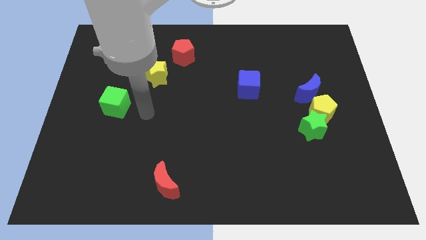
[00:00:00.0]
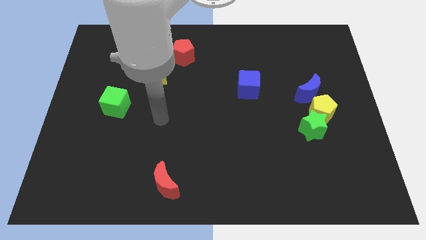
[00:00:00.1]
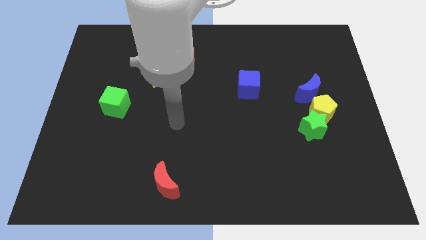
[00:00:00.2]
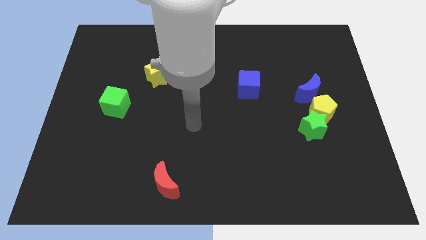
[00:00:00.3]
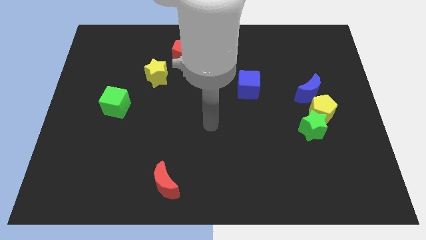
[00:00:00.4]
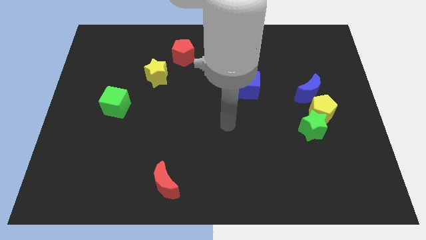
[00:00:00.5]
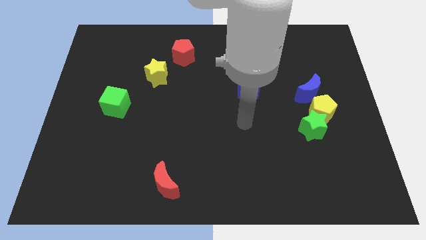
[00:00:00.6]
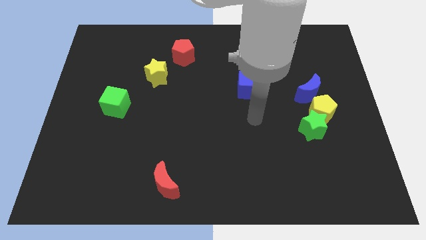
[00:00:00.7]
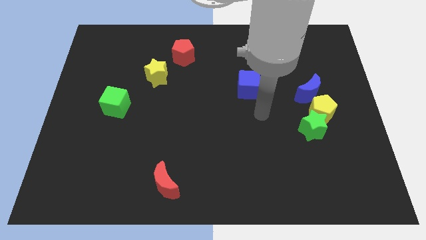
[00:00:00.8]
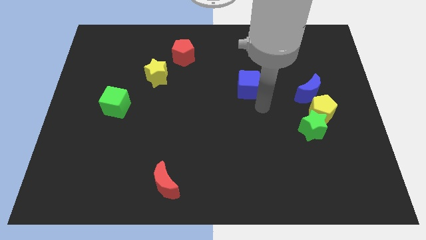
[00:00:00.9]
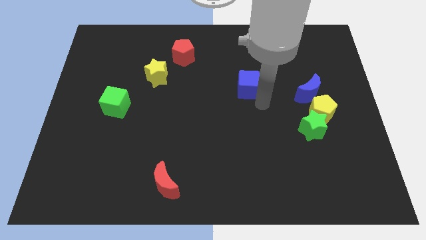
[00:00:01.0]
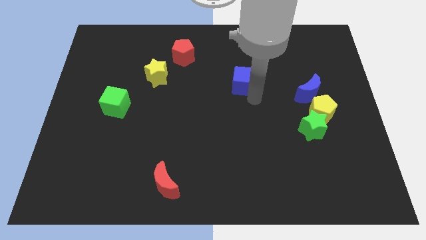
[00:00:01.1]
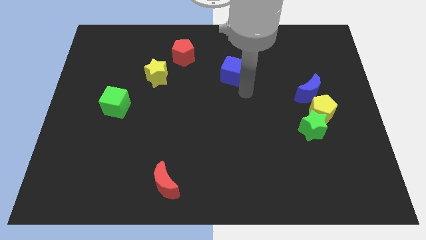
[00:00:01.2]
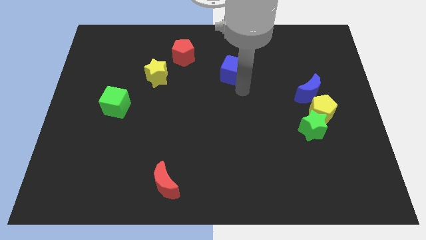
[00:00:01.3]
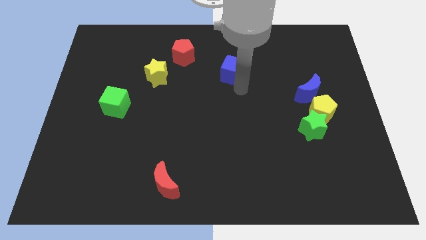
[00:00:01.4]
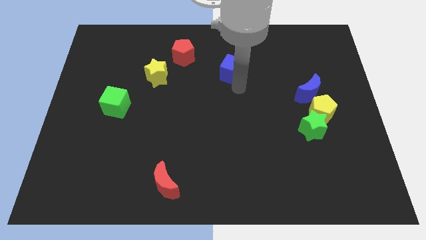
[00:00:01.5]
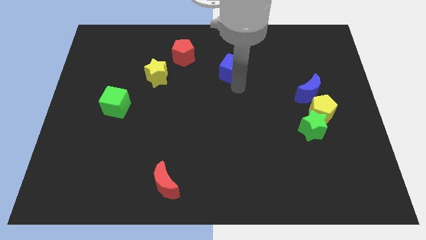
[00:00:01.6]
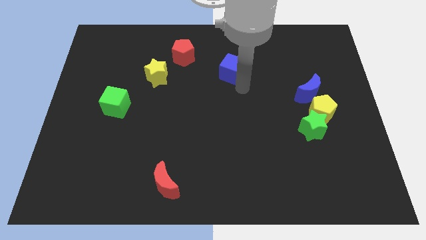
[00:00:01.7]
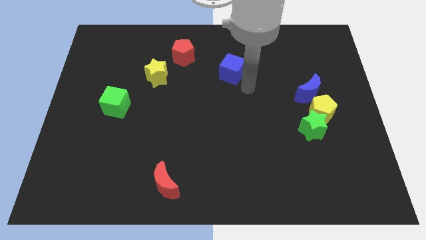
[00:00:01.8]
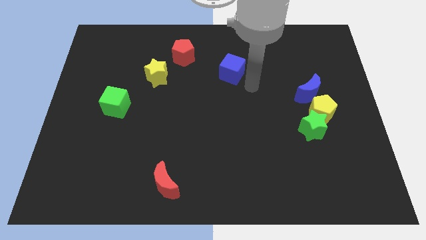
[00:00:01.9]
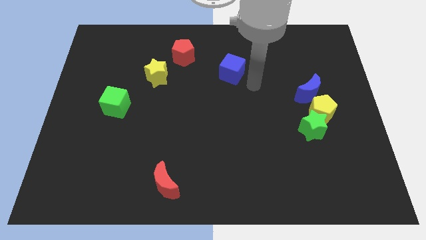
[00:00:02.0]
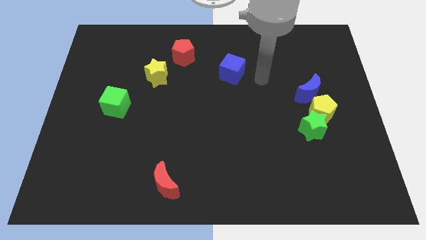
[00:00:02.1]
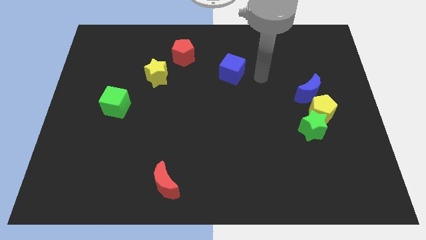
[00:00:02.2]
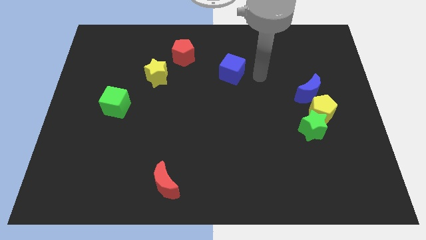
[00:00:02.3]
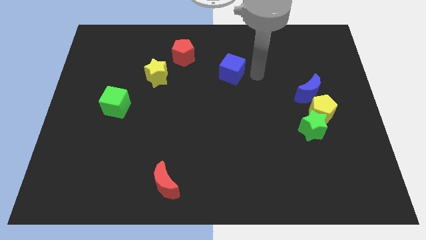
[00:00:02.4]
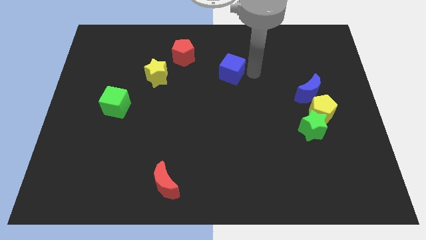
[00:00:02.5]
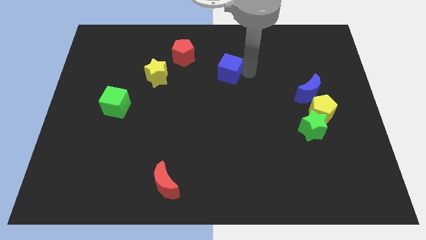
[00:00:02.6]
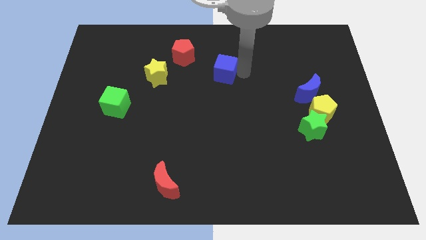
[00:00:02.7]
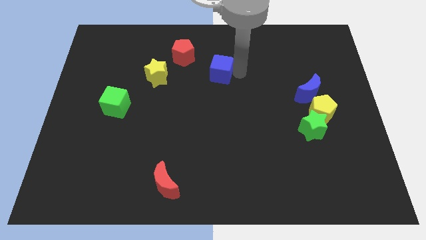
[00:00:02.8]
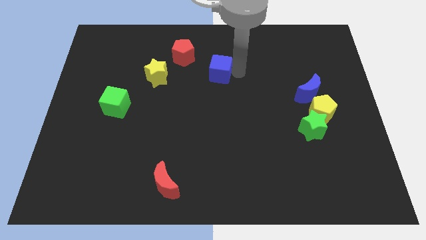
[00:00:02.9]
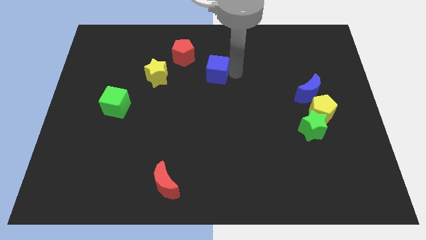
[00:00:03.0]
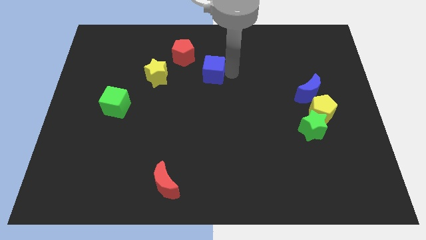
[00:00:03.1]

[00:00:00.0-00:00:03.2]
push the blue cube towards the red pentagon

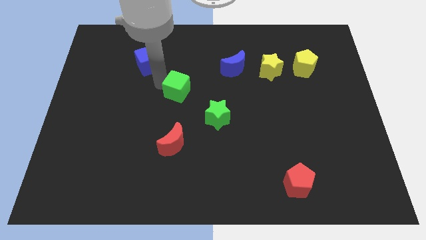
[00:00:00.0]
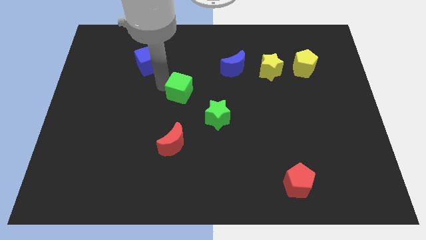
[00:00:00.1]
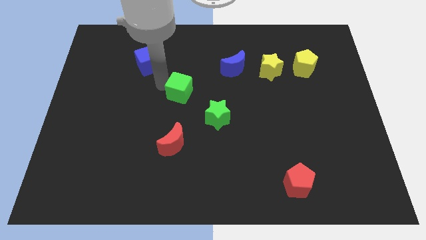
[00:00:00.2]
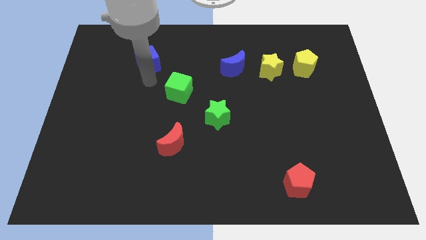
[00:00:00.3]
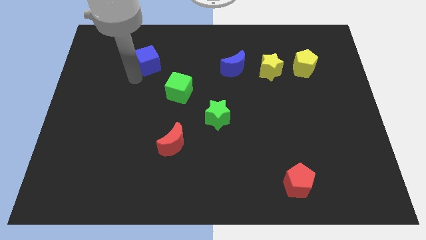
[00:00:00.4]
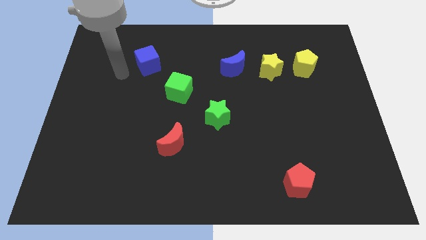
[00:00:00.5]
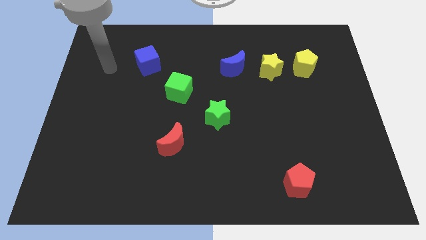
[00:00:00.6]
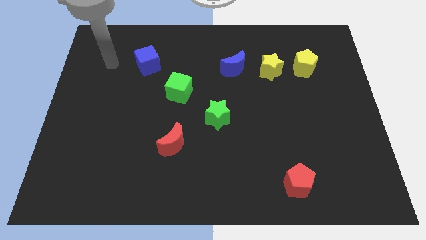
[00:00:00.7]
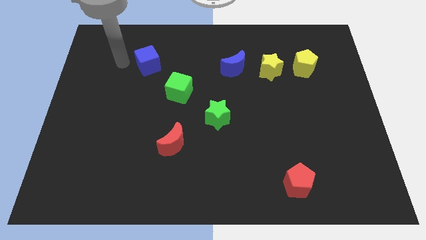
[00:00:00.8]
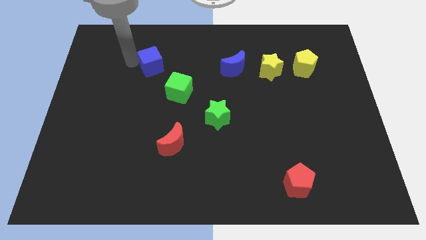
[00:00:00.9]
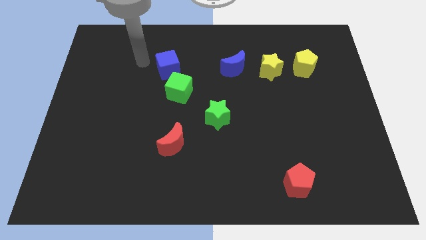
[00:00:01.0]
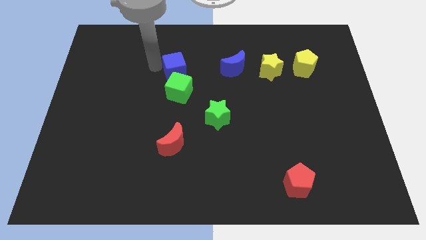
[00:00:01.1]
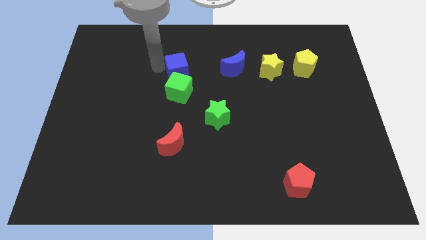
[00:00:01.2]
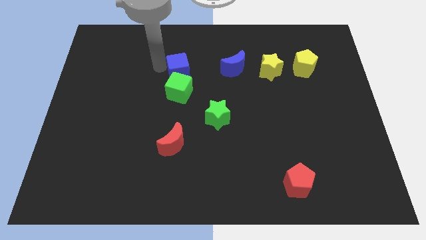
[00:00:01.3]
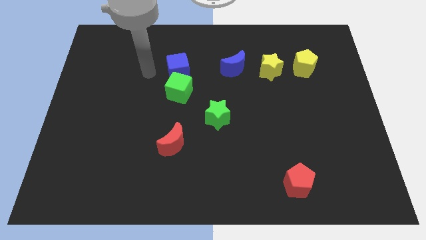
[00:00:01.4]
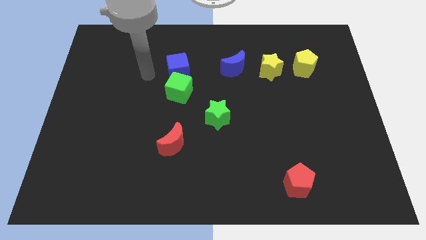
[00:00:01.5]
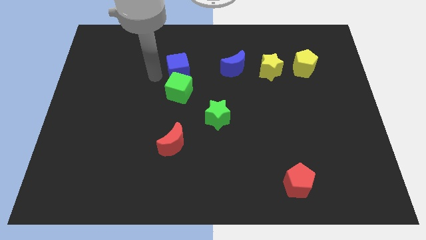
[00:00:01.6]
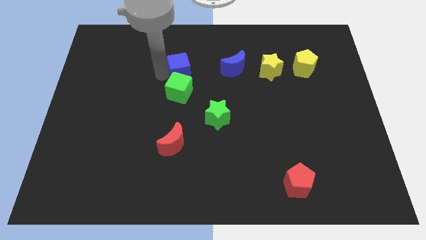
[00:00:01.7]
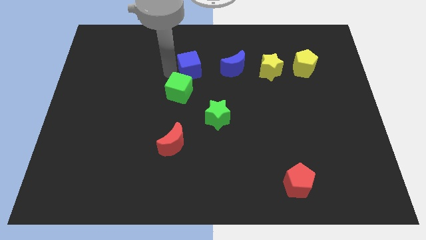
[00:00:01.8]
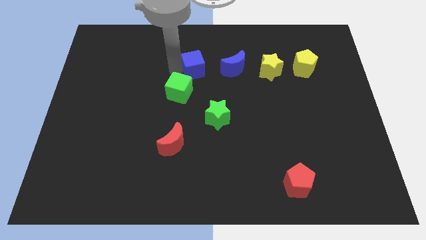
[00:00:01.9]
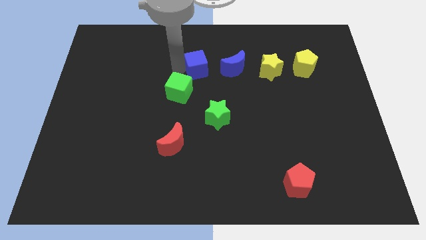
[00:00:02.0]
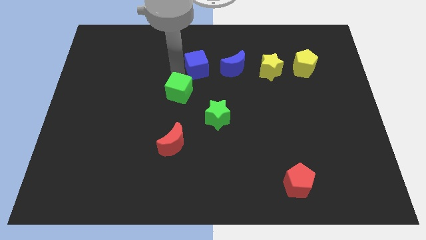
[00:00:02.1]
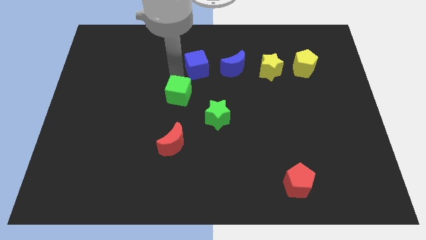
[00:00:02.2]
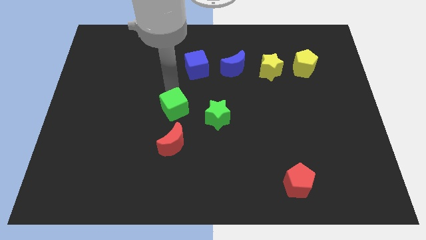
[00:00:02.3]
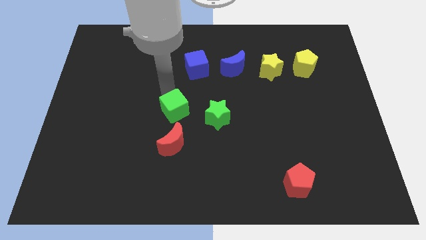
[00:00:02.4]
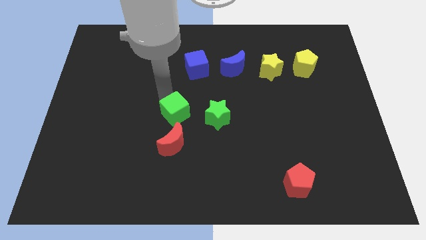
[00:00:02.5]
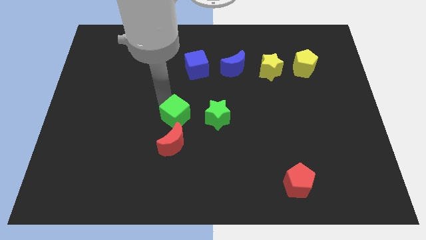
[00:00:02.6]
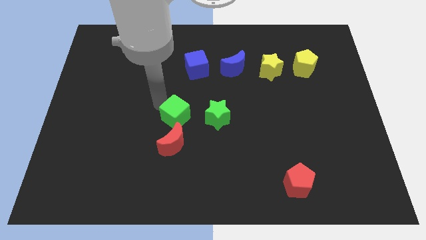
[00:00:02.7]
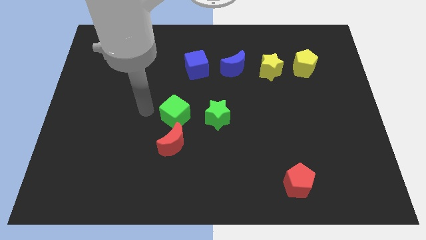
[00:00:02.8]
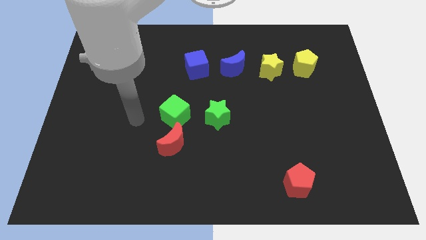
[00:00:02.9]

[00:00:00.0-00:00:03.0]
place green cube to the left side of green star

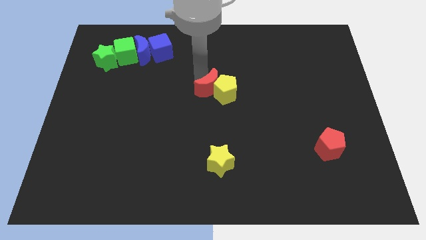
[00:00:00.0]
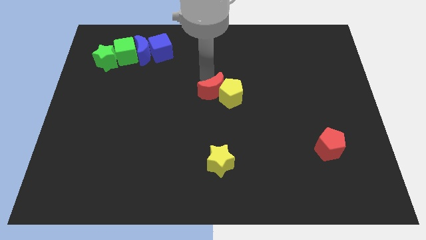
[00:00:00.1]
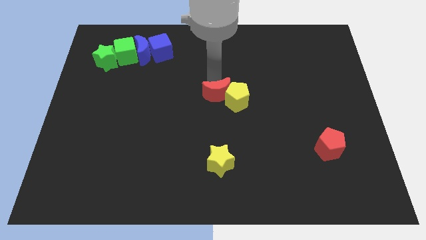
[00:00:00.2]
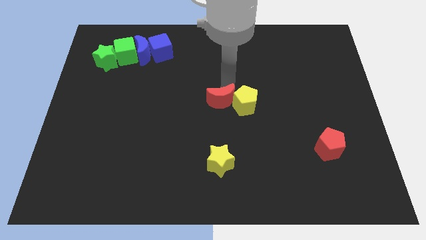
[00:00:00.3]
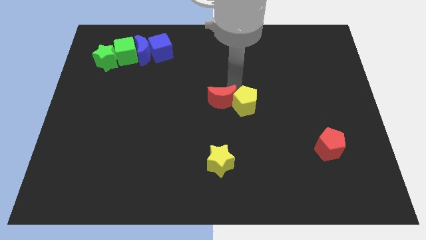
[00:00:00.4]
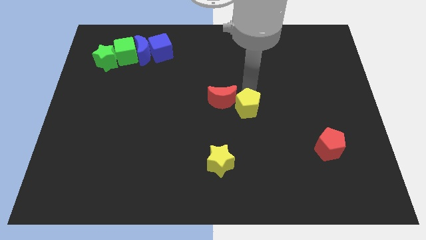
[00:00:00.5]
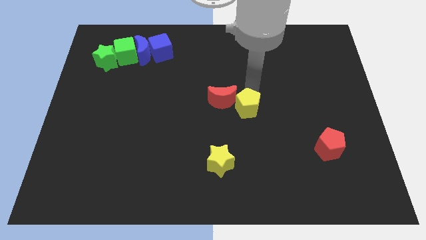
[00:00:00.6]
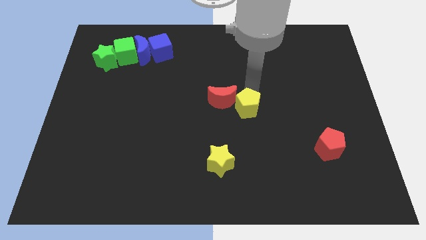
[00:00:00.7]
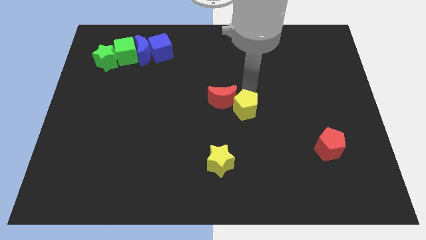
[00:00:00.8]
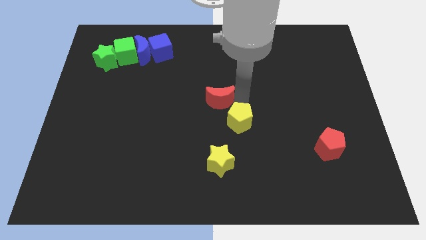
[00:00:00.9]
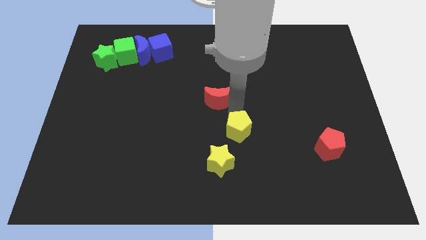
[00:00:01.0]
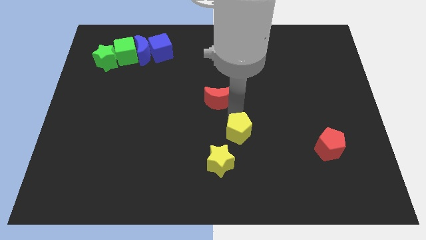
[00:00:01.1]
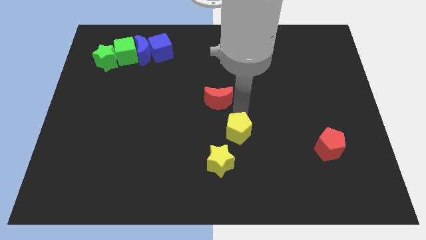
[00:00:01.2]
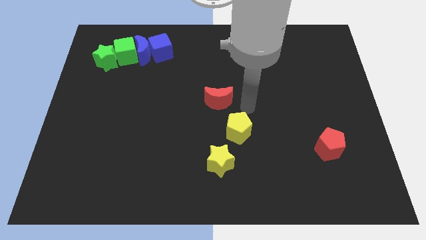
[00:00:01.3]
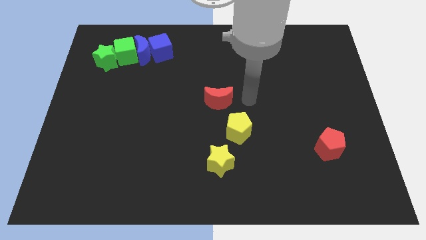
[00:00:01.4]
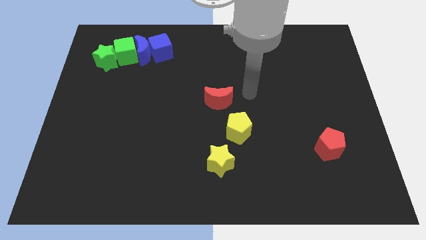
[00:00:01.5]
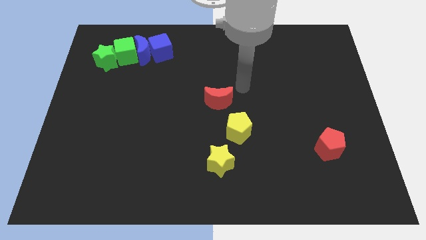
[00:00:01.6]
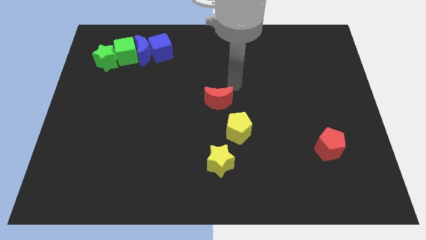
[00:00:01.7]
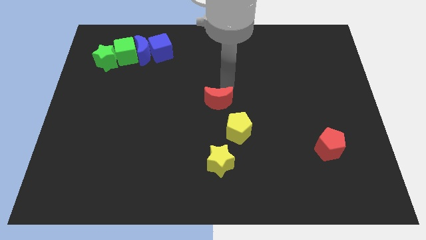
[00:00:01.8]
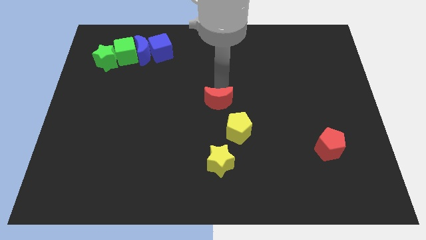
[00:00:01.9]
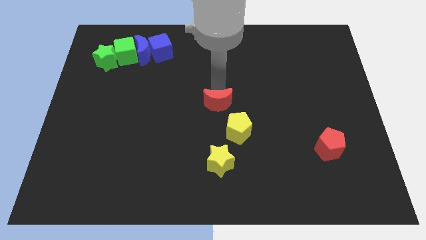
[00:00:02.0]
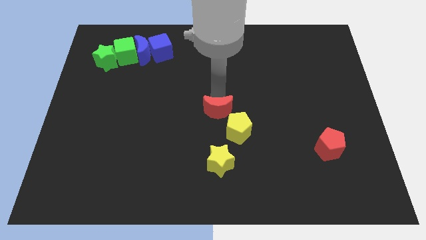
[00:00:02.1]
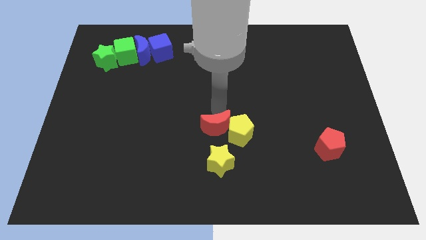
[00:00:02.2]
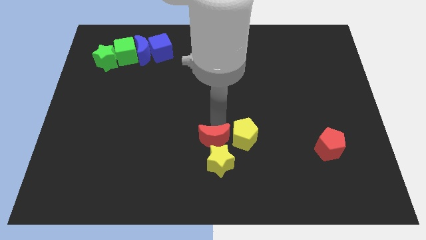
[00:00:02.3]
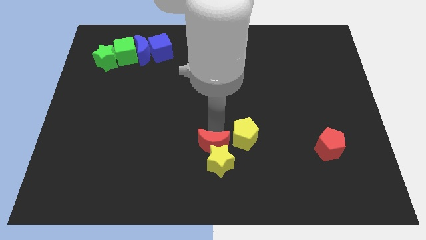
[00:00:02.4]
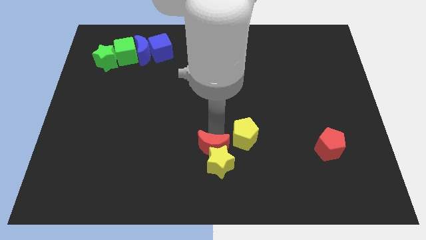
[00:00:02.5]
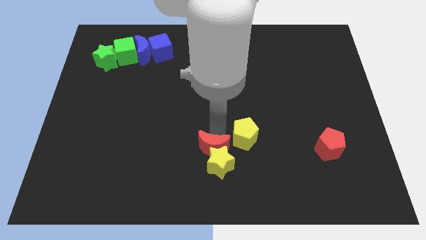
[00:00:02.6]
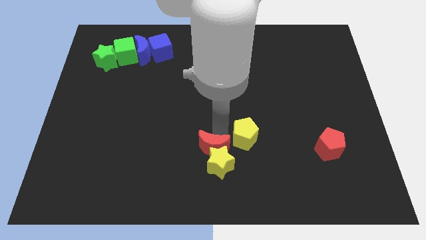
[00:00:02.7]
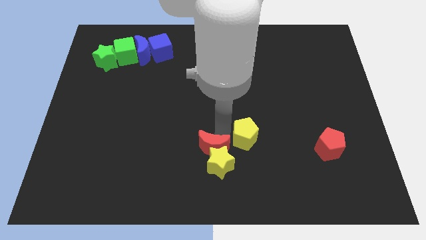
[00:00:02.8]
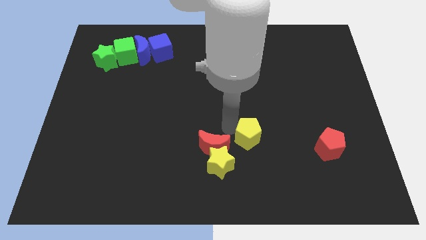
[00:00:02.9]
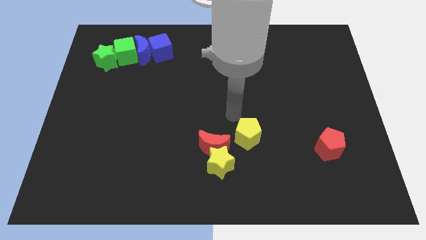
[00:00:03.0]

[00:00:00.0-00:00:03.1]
push the red crescent into the yellow star
